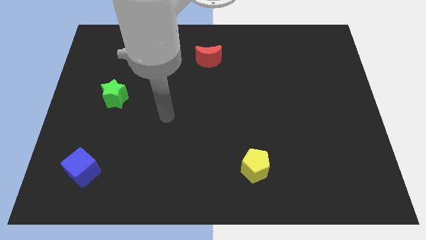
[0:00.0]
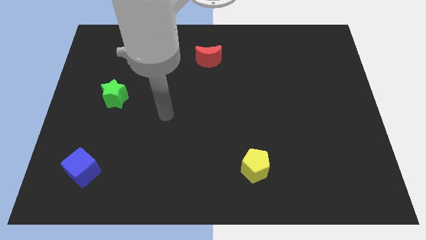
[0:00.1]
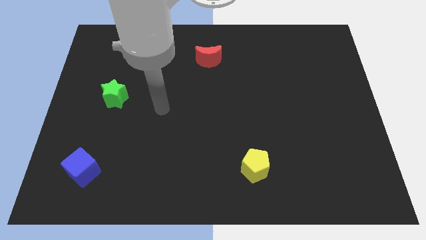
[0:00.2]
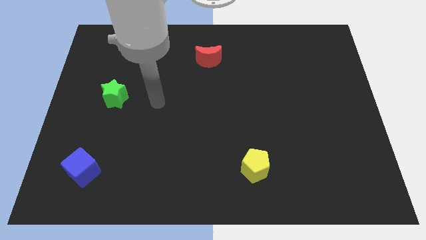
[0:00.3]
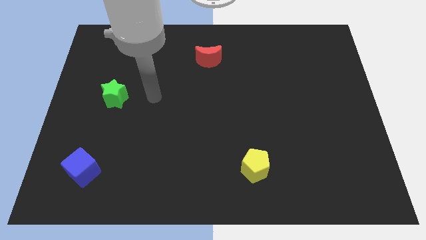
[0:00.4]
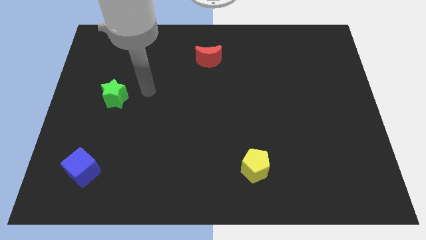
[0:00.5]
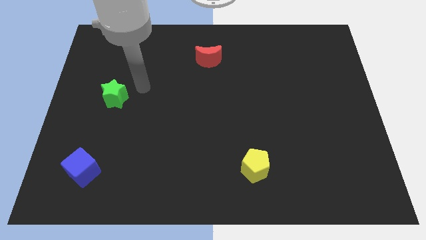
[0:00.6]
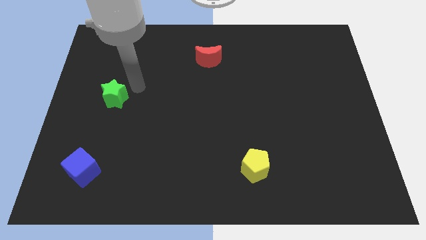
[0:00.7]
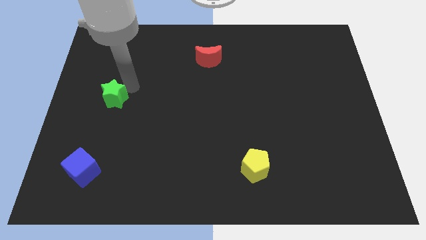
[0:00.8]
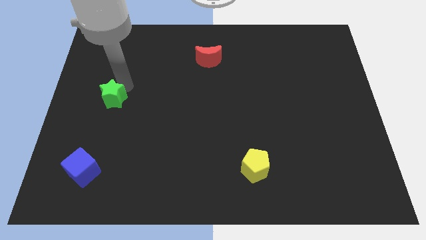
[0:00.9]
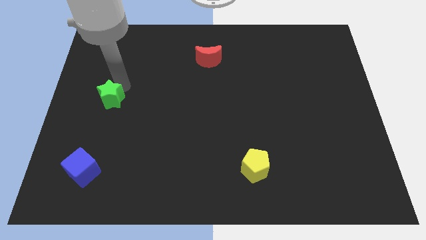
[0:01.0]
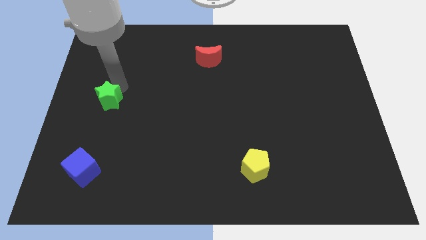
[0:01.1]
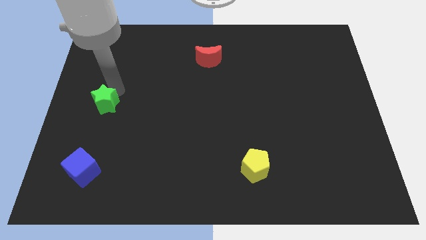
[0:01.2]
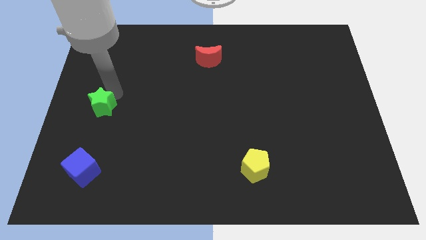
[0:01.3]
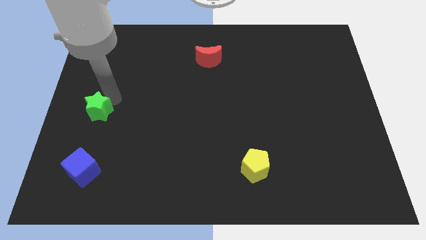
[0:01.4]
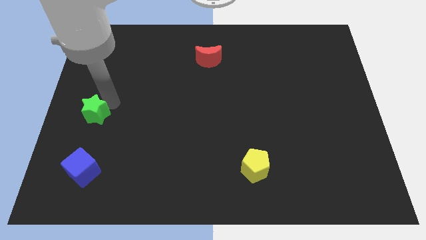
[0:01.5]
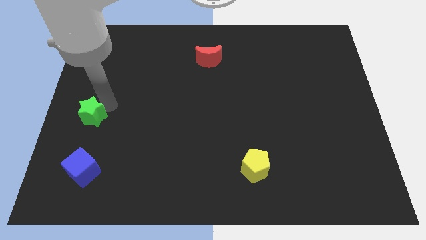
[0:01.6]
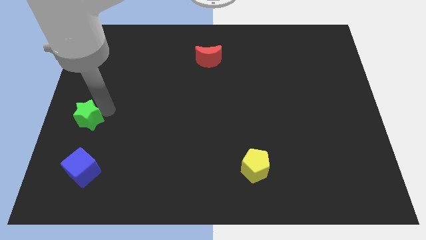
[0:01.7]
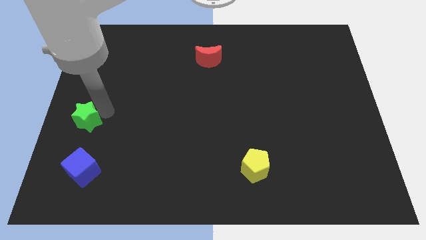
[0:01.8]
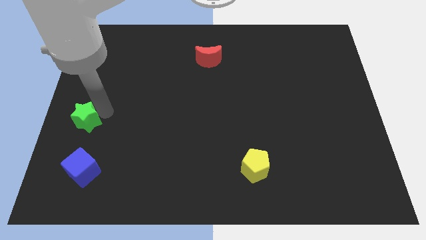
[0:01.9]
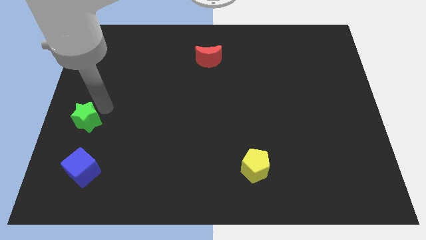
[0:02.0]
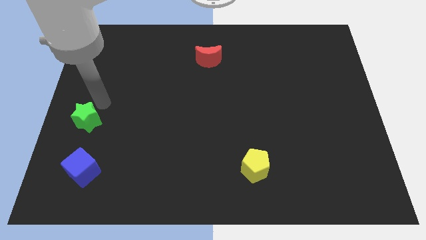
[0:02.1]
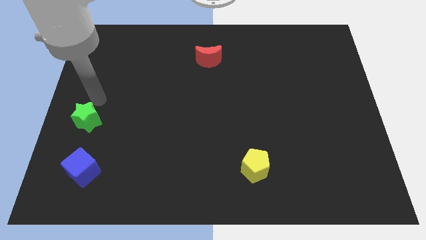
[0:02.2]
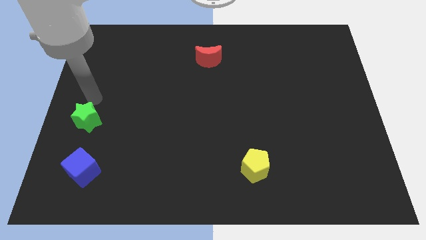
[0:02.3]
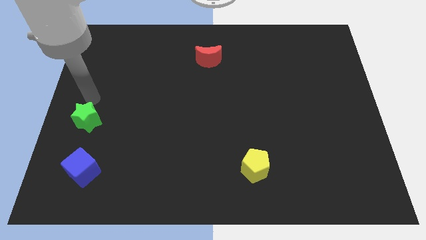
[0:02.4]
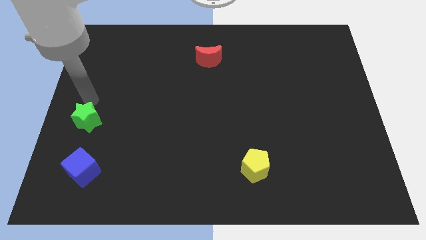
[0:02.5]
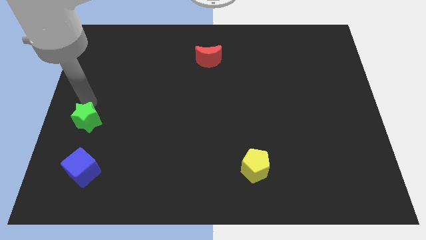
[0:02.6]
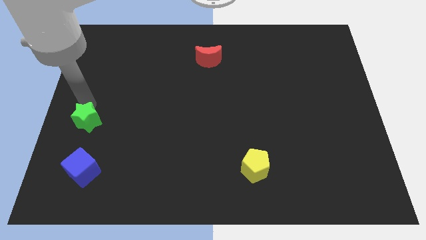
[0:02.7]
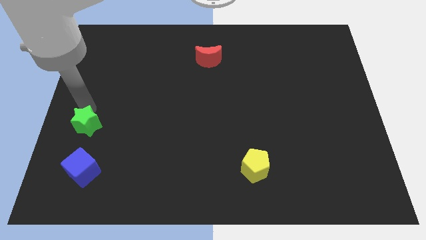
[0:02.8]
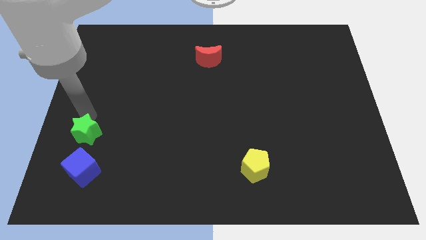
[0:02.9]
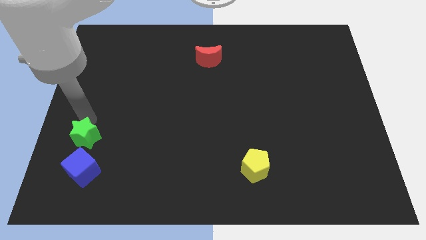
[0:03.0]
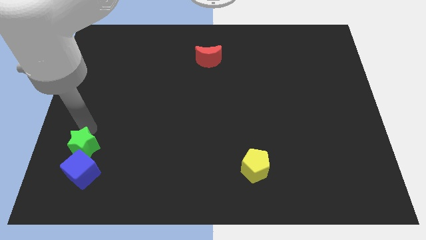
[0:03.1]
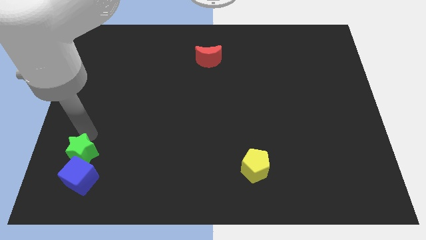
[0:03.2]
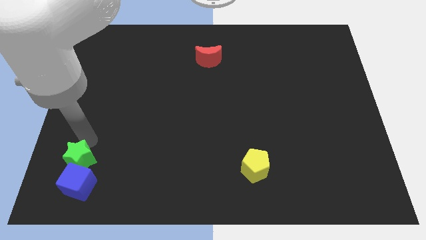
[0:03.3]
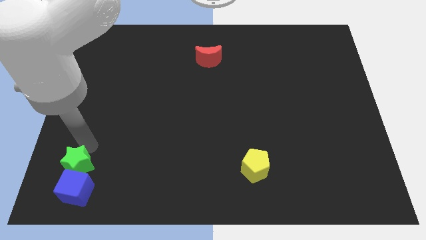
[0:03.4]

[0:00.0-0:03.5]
push the green block towards the cube

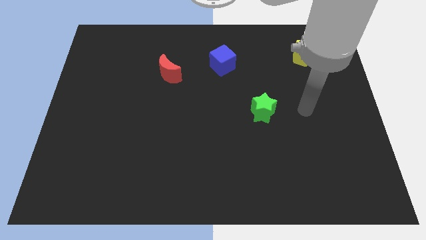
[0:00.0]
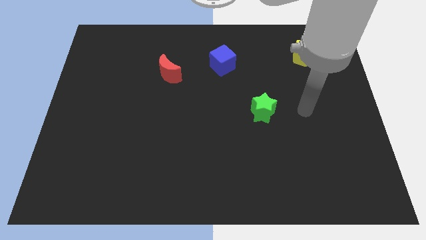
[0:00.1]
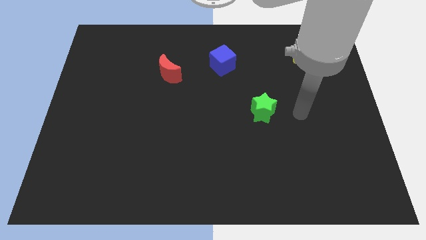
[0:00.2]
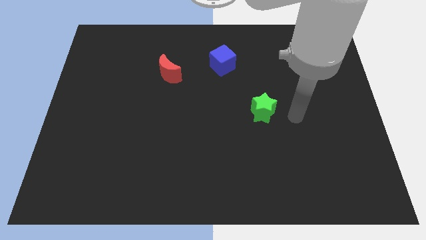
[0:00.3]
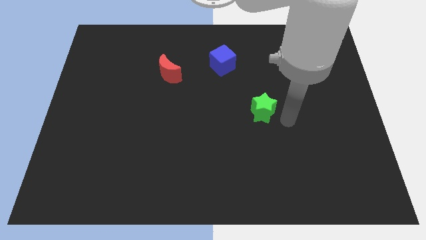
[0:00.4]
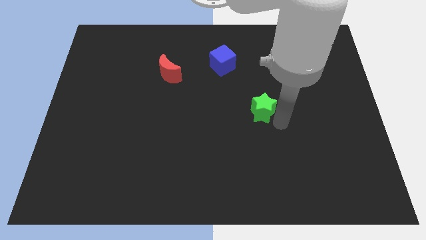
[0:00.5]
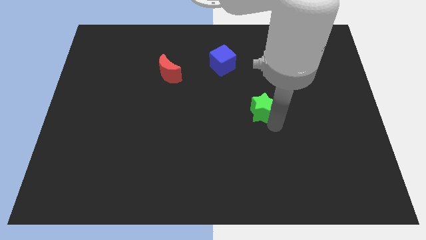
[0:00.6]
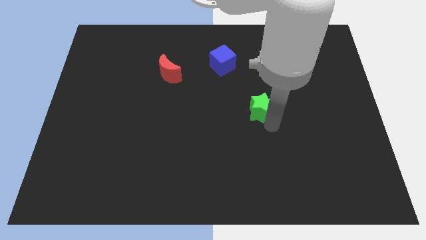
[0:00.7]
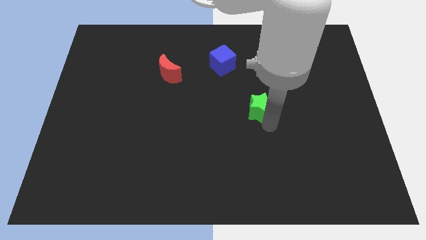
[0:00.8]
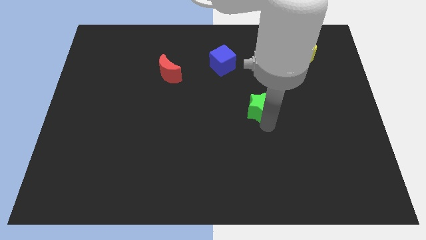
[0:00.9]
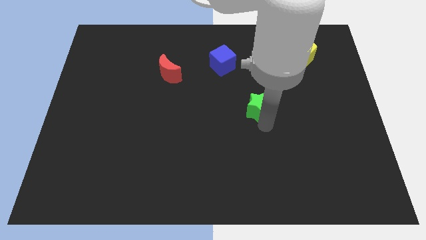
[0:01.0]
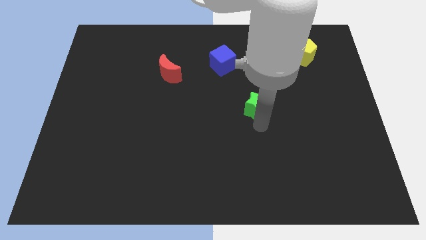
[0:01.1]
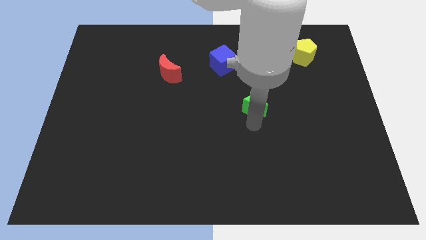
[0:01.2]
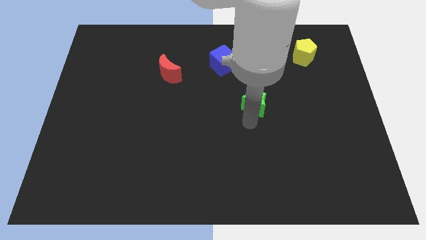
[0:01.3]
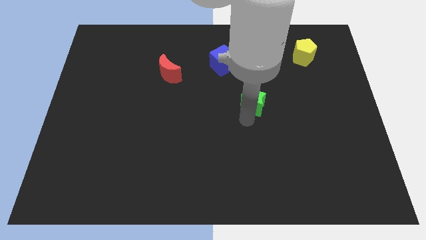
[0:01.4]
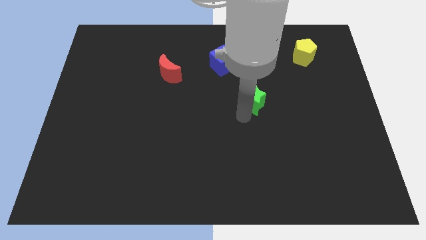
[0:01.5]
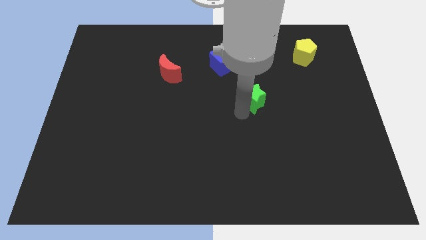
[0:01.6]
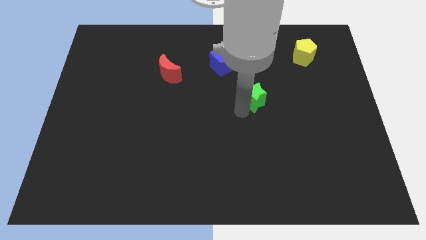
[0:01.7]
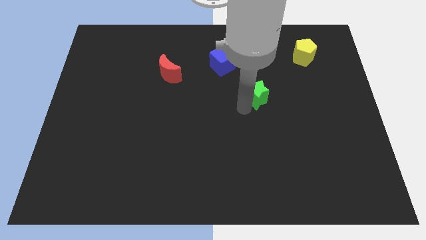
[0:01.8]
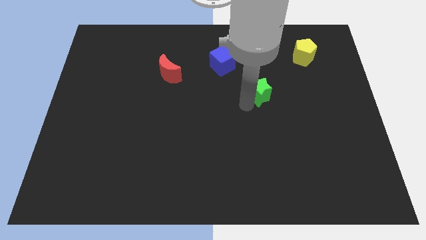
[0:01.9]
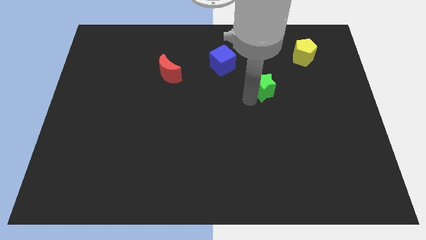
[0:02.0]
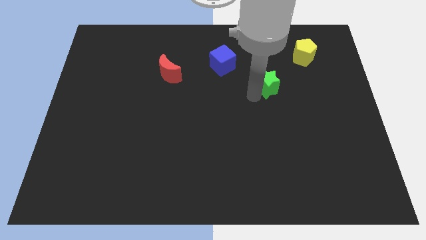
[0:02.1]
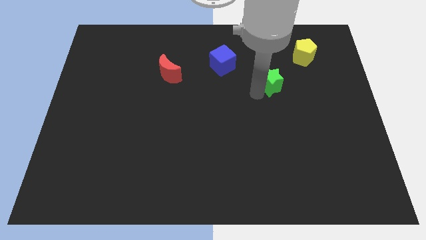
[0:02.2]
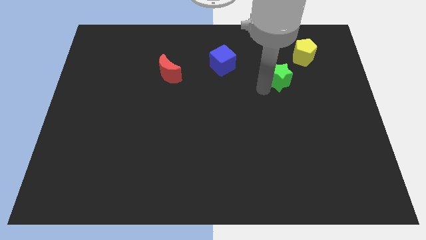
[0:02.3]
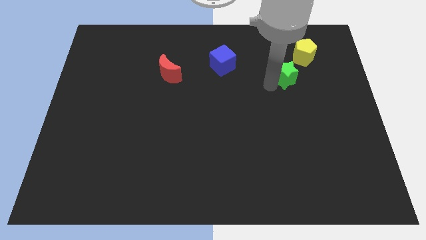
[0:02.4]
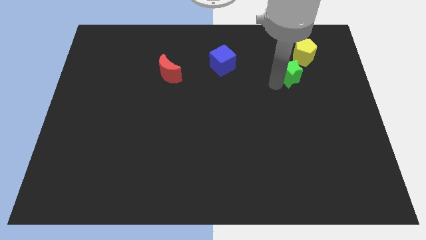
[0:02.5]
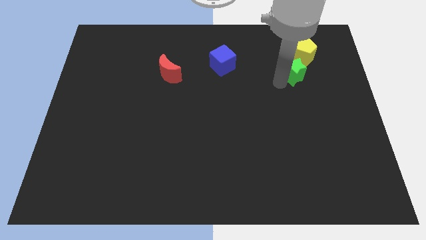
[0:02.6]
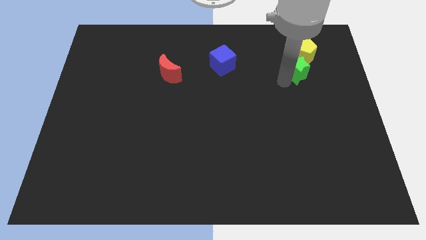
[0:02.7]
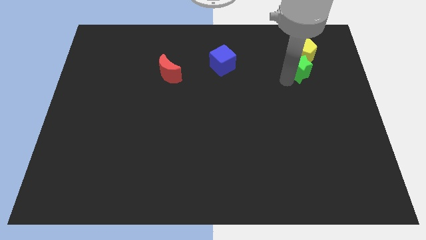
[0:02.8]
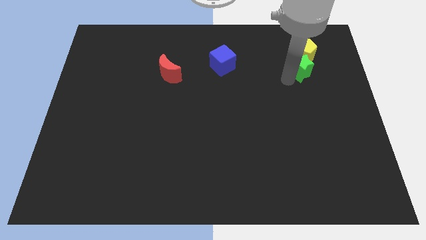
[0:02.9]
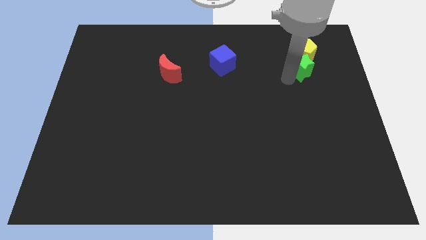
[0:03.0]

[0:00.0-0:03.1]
put the green star to the yellow block

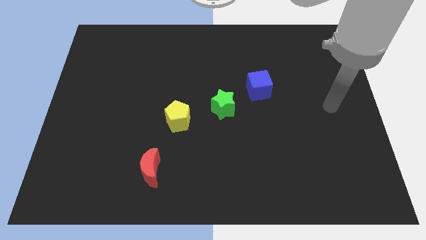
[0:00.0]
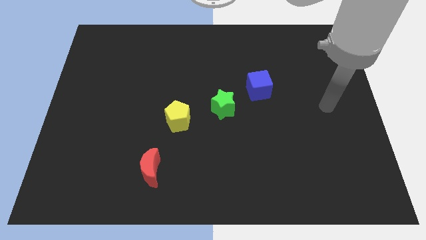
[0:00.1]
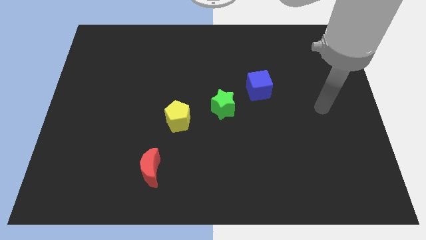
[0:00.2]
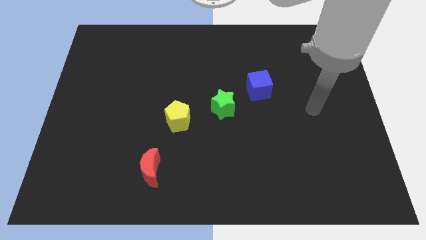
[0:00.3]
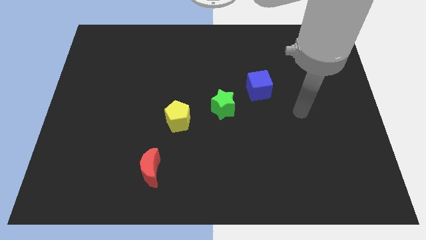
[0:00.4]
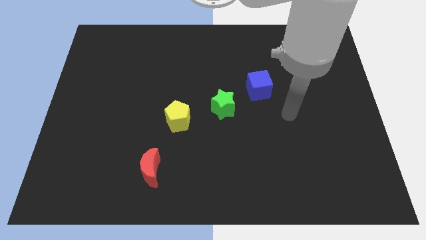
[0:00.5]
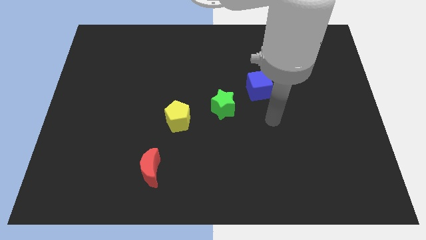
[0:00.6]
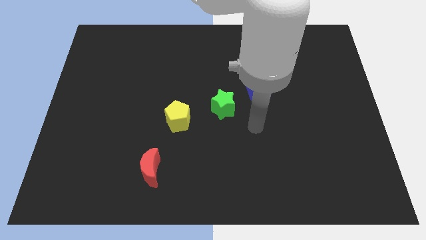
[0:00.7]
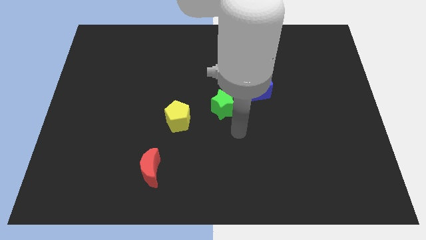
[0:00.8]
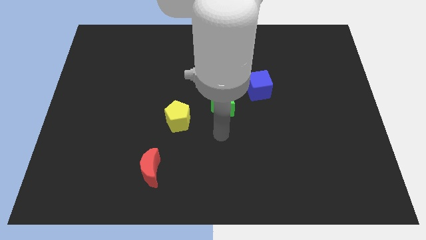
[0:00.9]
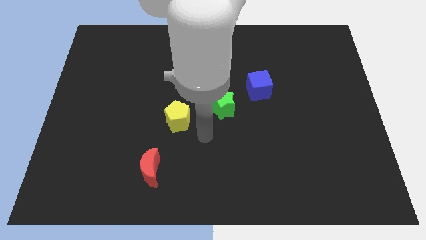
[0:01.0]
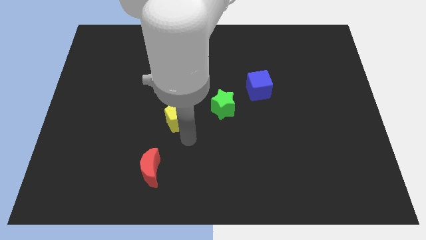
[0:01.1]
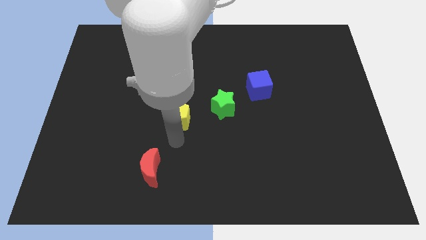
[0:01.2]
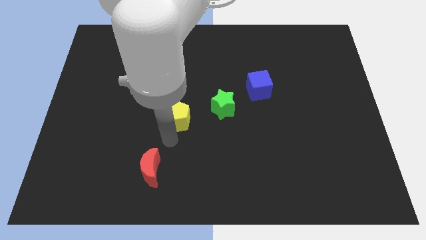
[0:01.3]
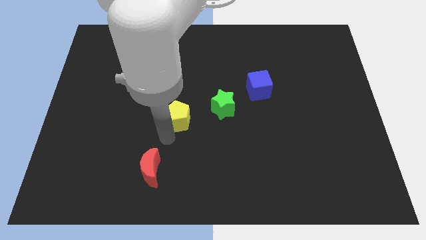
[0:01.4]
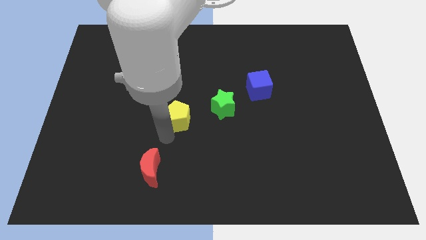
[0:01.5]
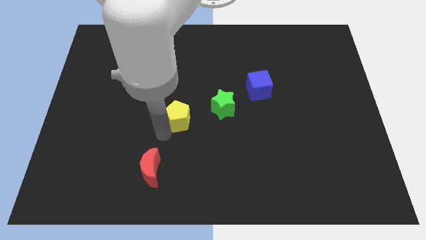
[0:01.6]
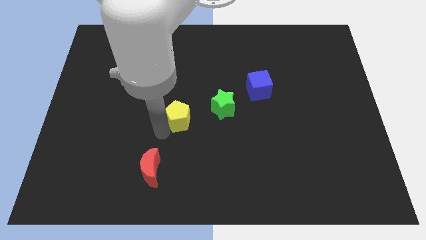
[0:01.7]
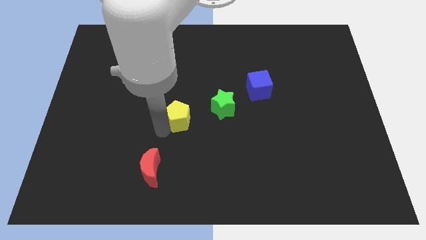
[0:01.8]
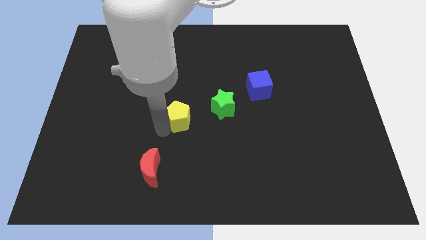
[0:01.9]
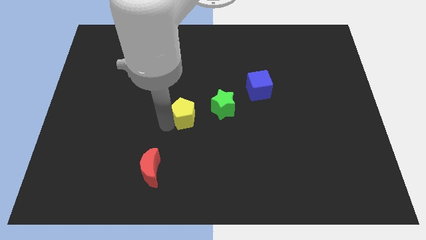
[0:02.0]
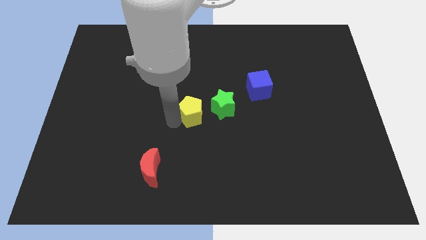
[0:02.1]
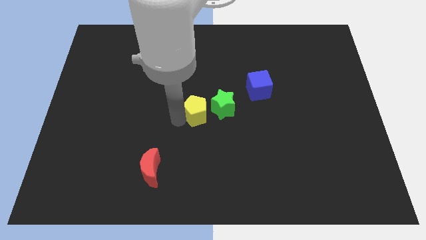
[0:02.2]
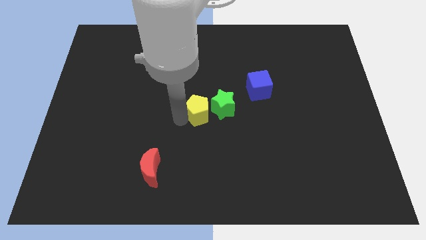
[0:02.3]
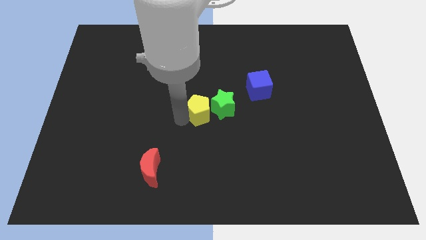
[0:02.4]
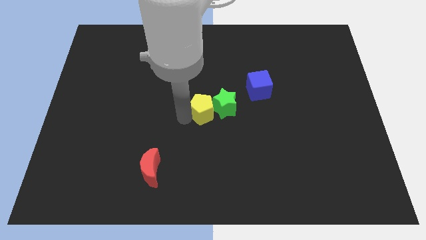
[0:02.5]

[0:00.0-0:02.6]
put the yellow pentagon next to the star
